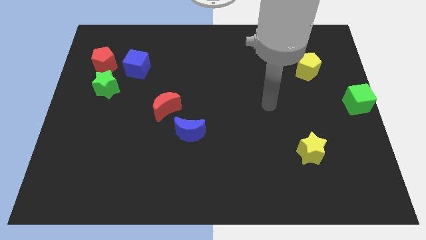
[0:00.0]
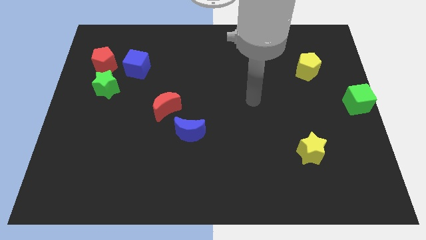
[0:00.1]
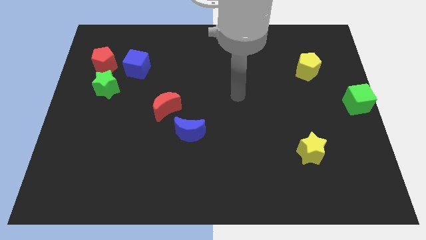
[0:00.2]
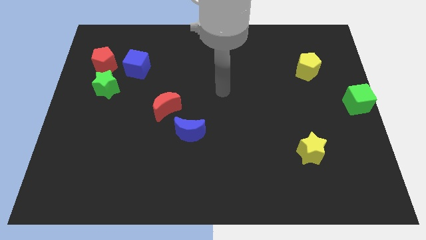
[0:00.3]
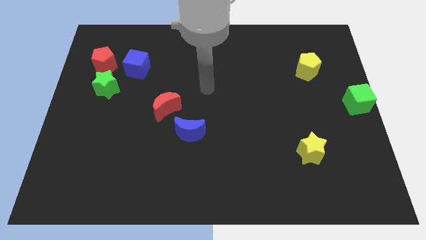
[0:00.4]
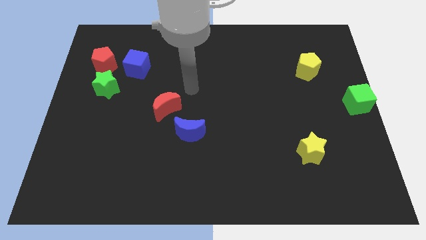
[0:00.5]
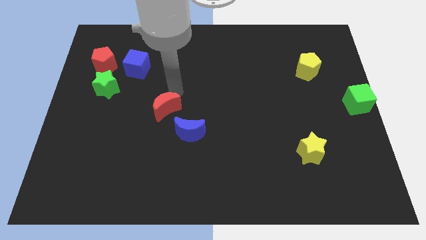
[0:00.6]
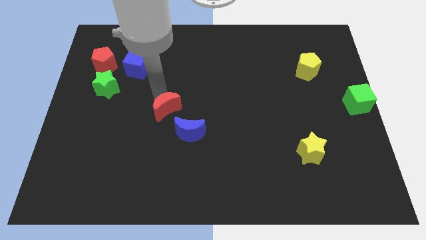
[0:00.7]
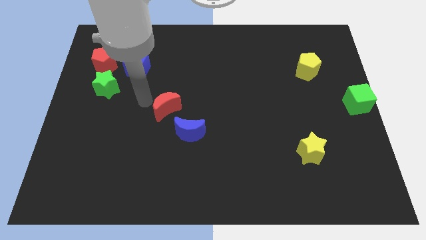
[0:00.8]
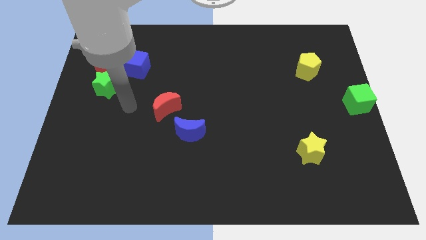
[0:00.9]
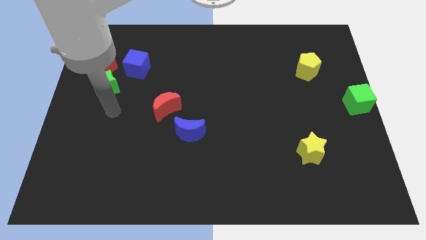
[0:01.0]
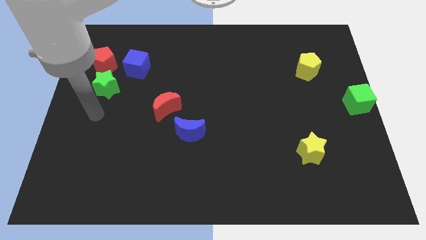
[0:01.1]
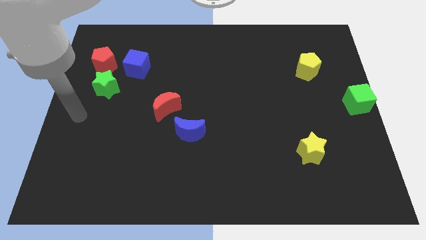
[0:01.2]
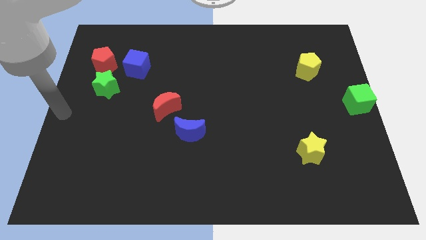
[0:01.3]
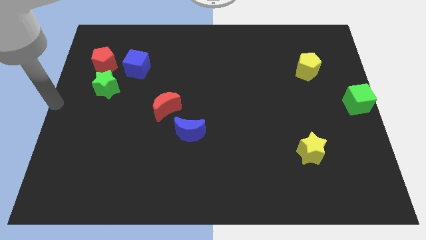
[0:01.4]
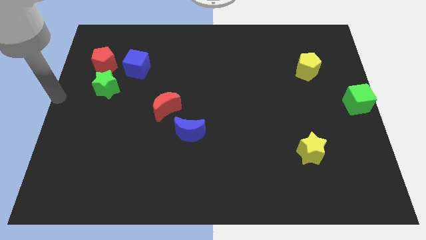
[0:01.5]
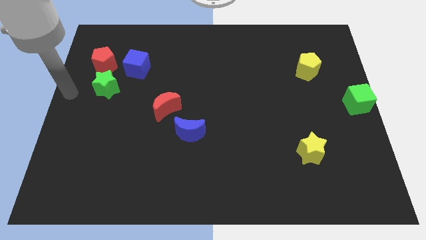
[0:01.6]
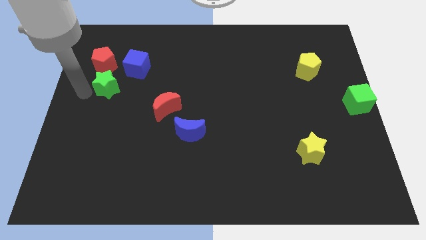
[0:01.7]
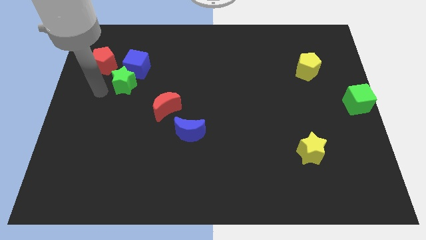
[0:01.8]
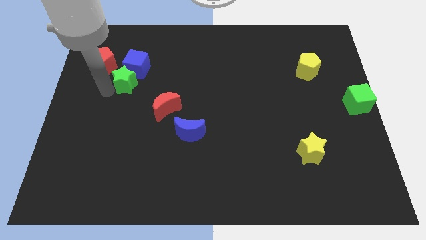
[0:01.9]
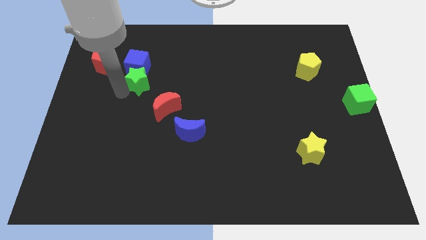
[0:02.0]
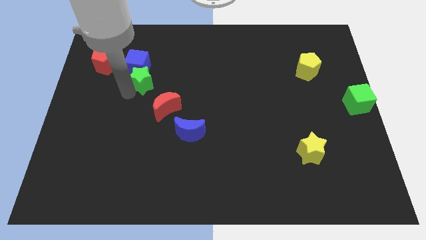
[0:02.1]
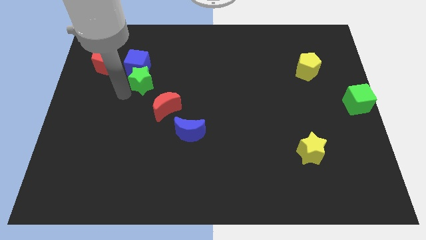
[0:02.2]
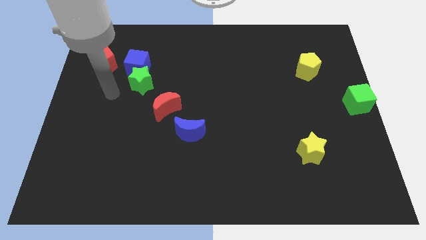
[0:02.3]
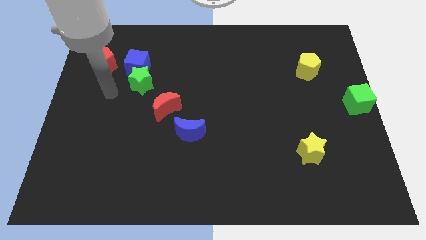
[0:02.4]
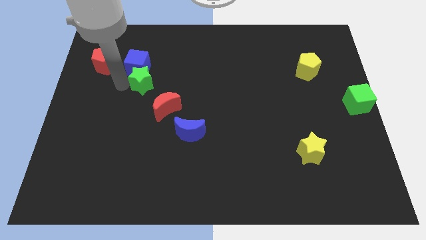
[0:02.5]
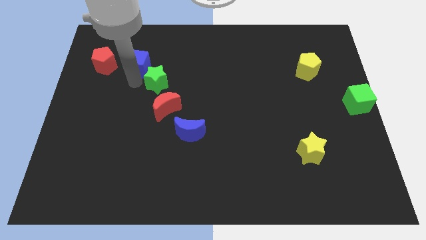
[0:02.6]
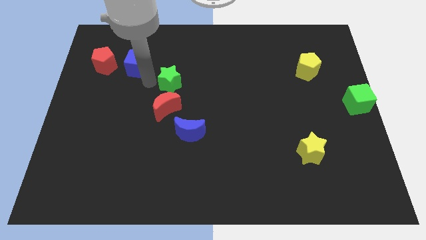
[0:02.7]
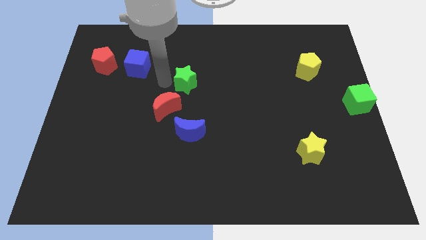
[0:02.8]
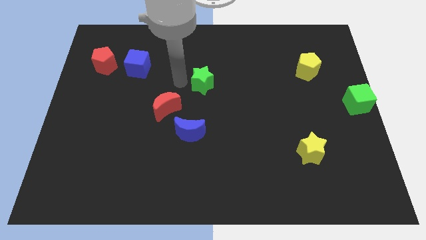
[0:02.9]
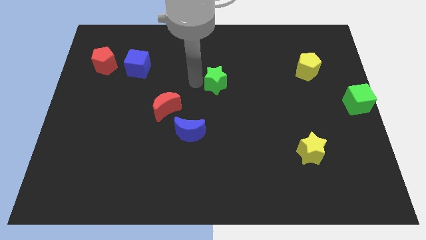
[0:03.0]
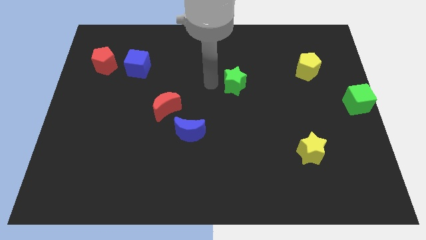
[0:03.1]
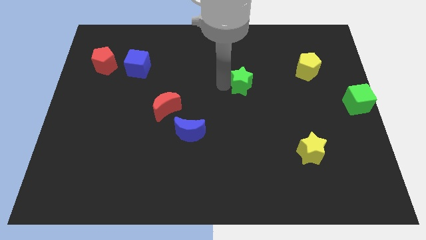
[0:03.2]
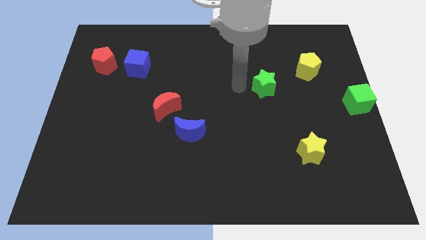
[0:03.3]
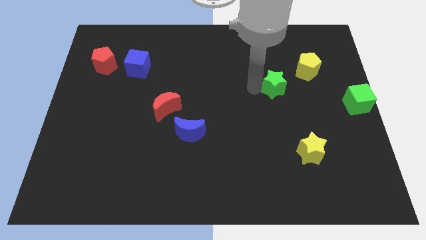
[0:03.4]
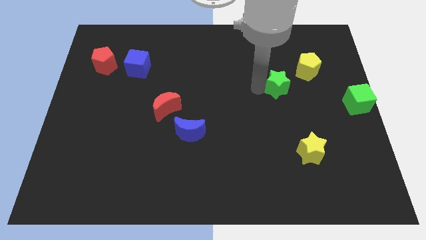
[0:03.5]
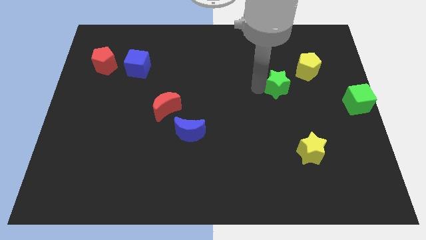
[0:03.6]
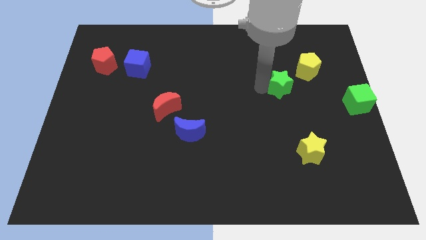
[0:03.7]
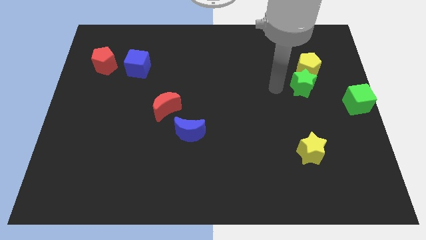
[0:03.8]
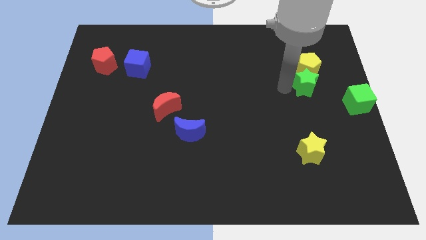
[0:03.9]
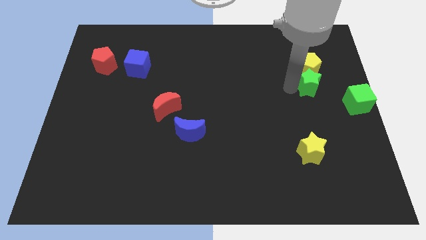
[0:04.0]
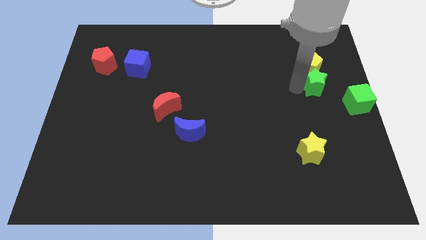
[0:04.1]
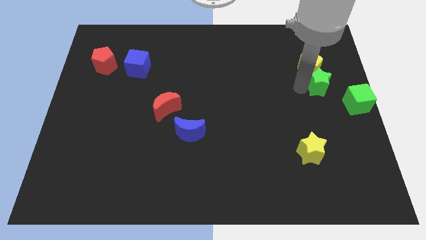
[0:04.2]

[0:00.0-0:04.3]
push the green star into the bottom side of the yellow pentagon

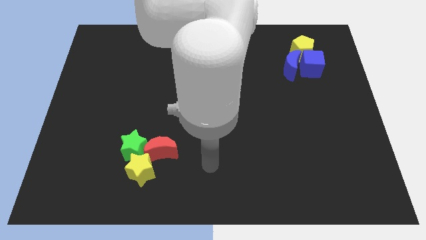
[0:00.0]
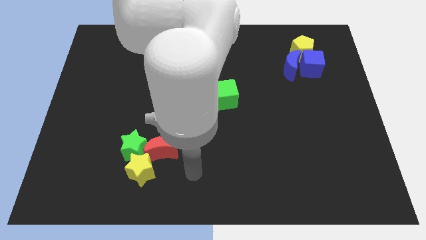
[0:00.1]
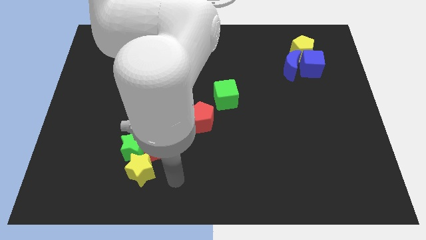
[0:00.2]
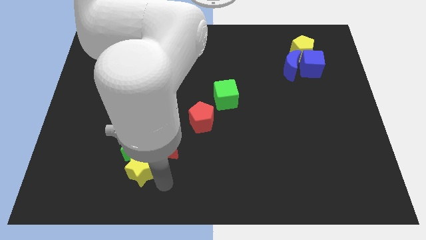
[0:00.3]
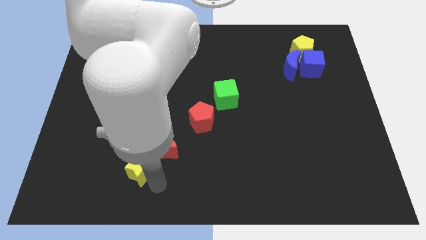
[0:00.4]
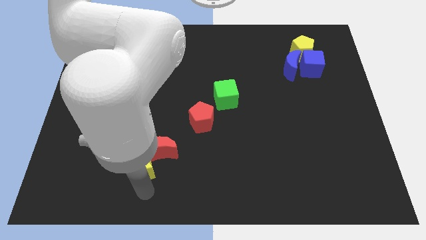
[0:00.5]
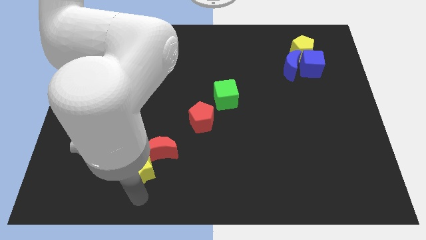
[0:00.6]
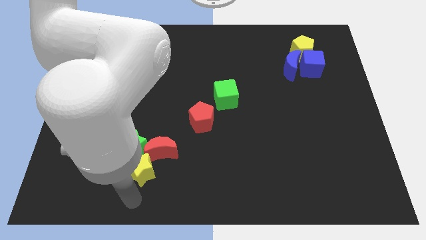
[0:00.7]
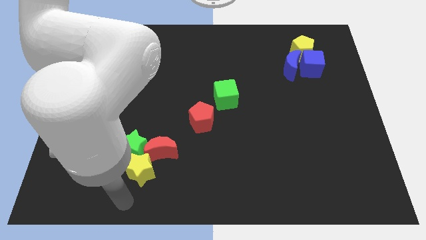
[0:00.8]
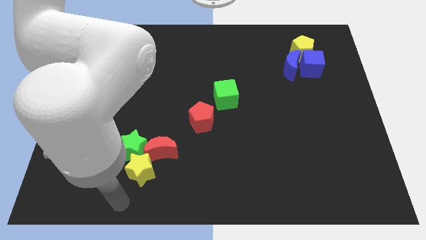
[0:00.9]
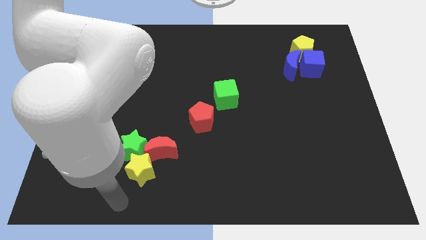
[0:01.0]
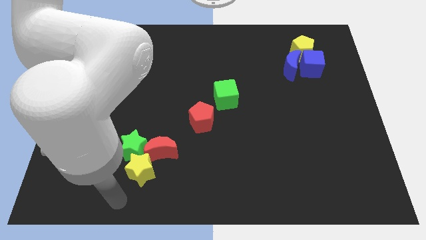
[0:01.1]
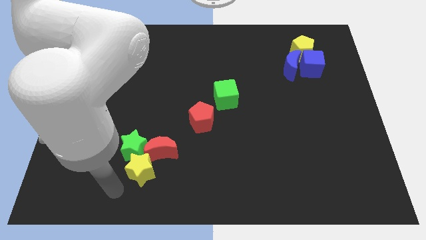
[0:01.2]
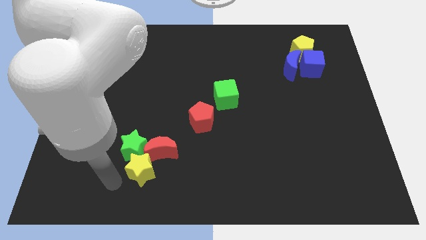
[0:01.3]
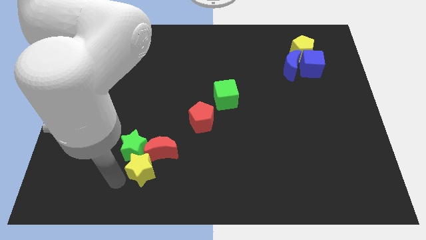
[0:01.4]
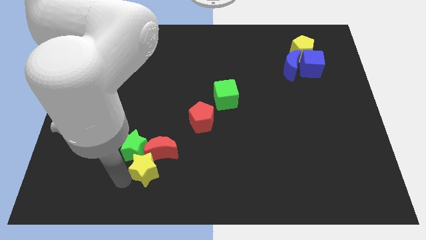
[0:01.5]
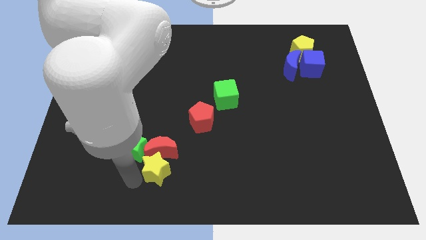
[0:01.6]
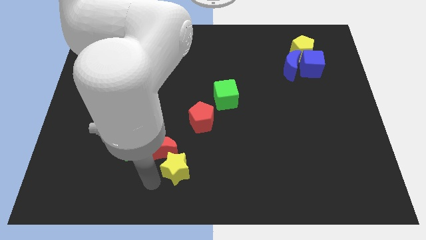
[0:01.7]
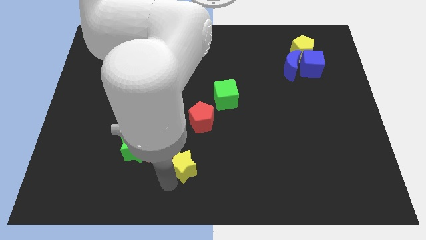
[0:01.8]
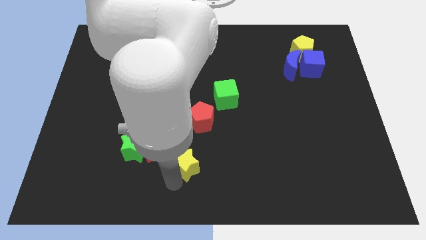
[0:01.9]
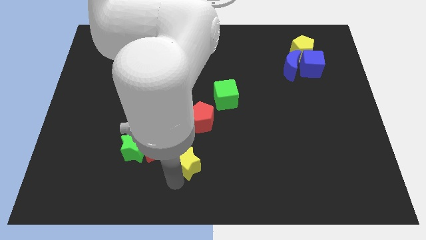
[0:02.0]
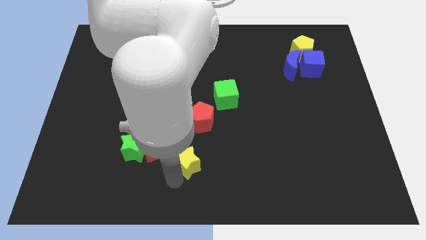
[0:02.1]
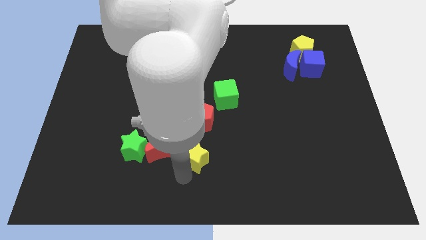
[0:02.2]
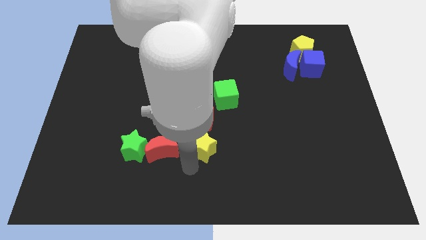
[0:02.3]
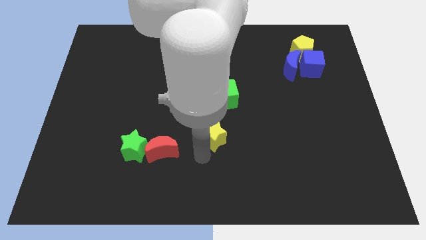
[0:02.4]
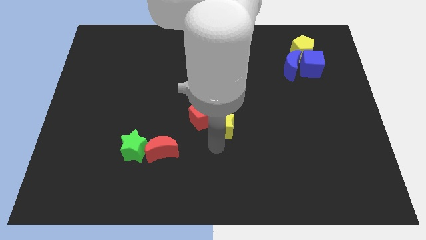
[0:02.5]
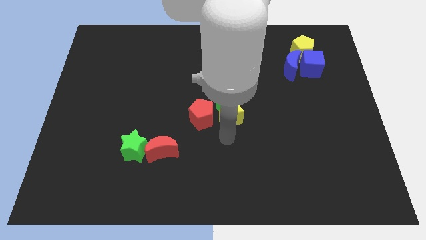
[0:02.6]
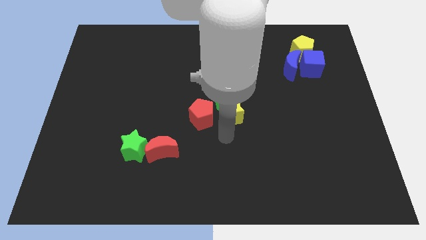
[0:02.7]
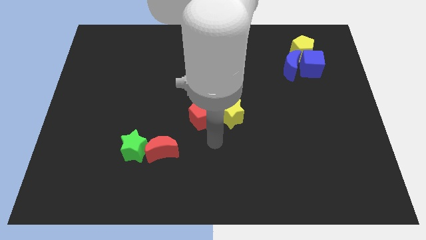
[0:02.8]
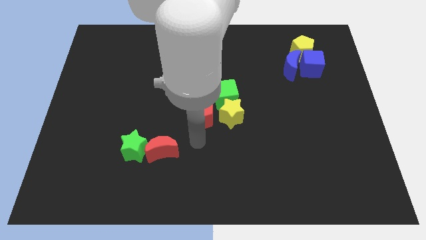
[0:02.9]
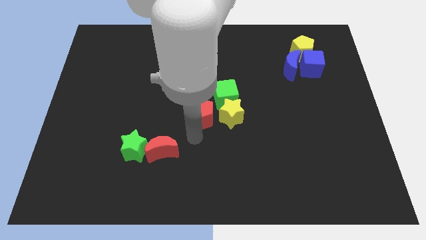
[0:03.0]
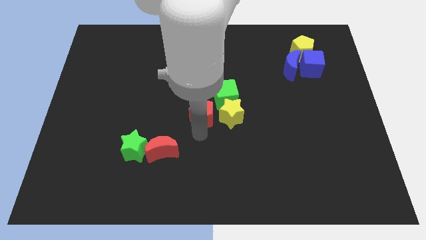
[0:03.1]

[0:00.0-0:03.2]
push the yellow star to the bottom of the green cube

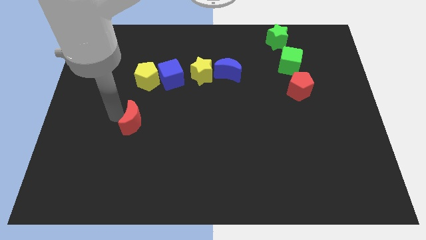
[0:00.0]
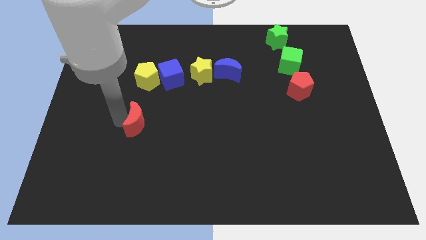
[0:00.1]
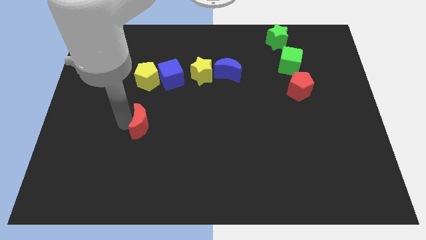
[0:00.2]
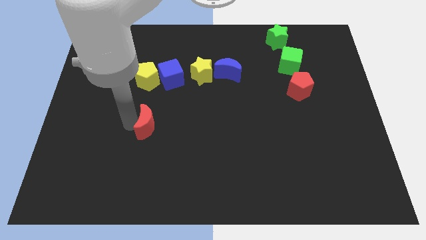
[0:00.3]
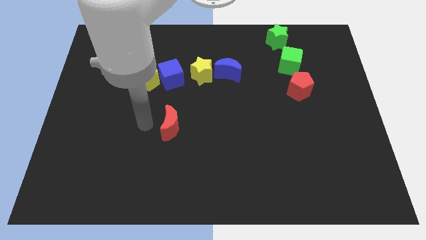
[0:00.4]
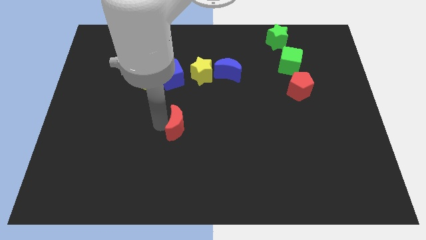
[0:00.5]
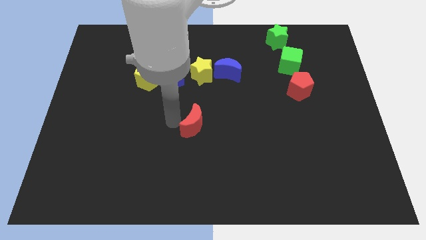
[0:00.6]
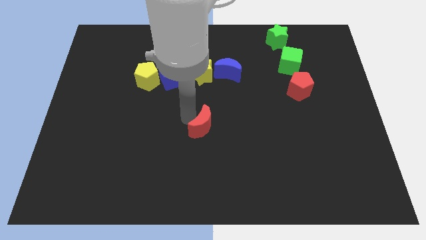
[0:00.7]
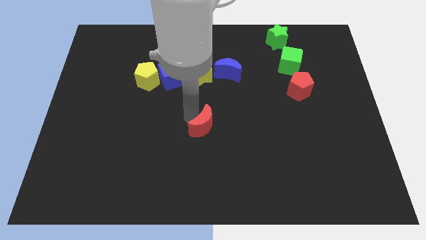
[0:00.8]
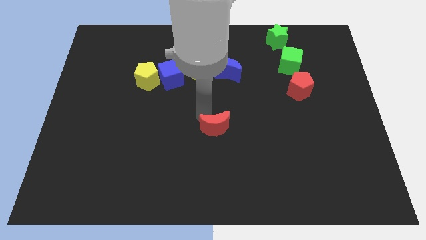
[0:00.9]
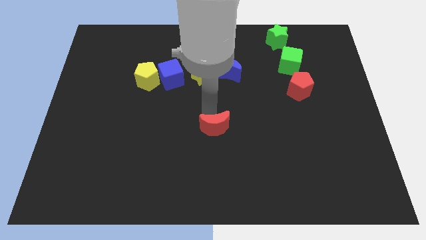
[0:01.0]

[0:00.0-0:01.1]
push the red crescent to the center of the board

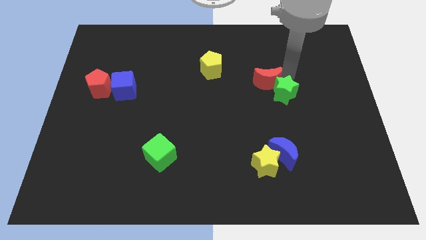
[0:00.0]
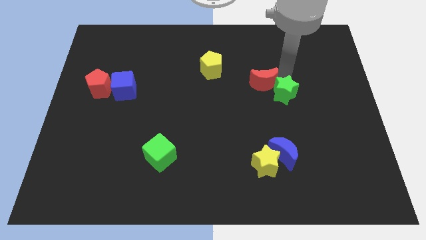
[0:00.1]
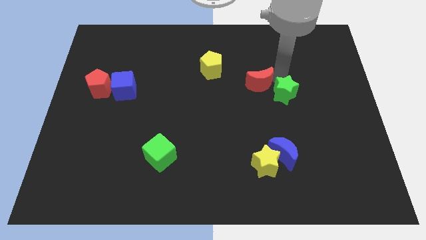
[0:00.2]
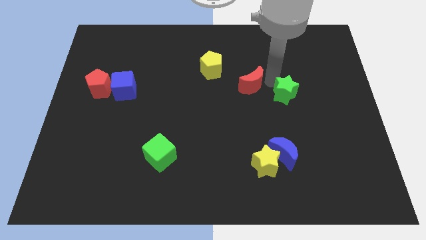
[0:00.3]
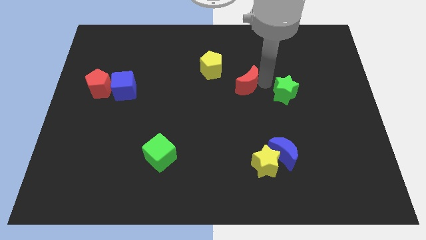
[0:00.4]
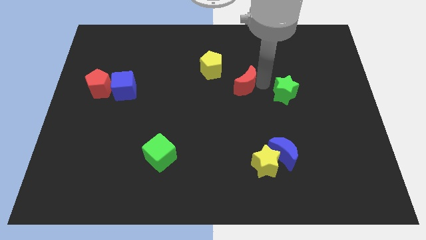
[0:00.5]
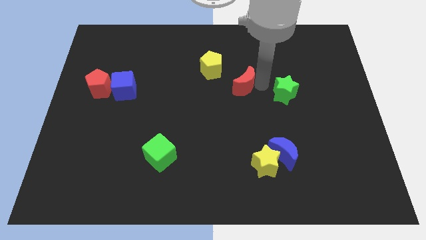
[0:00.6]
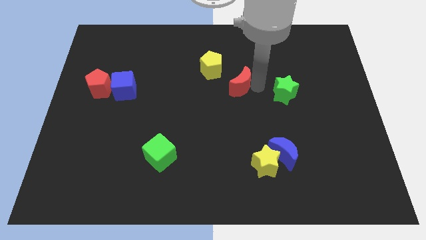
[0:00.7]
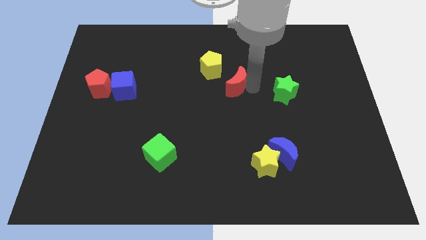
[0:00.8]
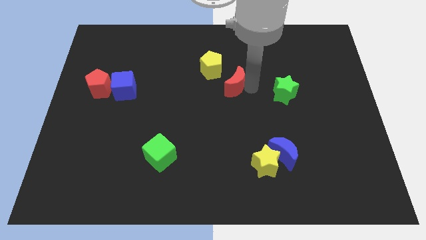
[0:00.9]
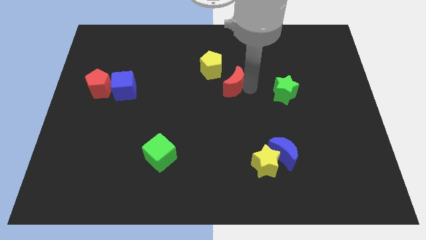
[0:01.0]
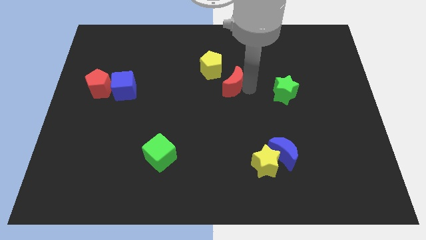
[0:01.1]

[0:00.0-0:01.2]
push the red moon to the below right of yellow pentagon
